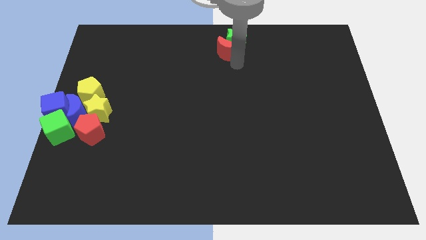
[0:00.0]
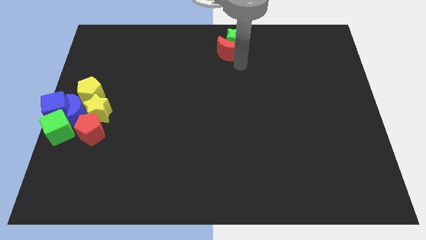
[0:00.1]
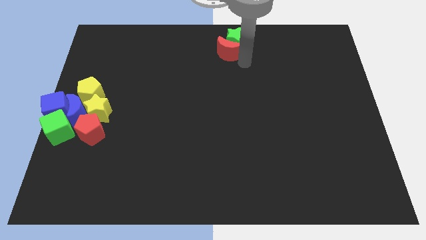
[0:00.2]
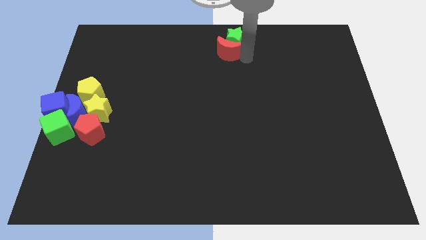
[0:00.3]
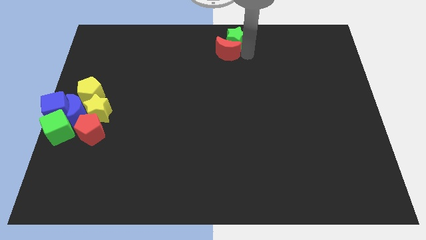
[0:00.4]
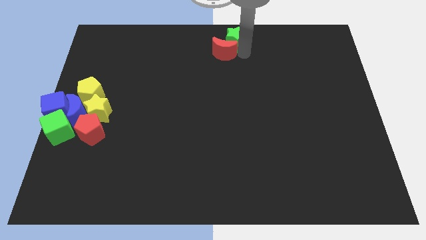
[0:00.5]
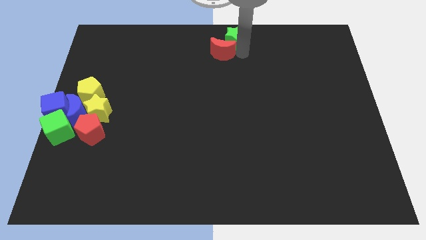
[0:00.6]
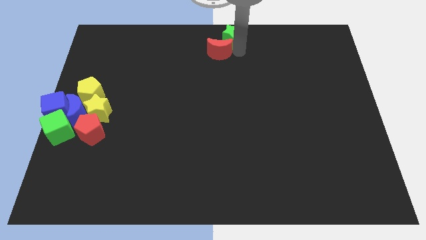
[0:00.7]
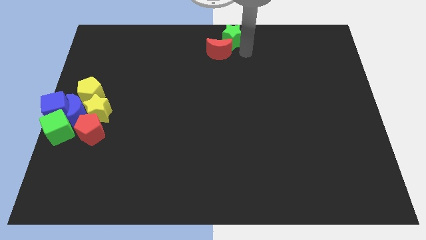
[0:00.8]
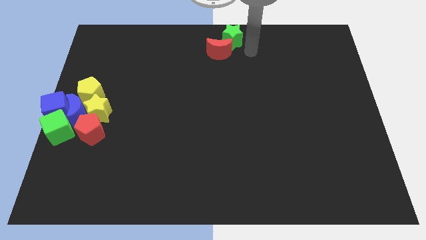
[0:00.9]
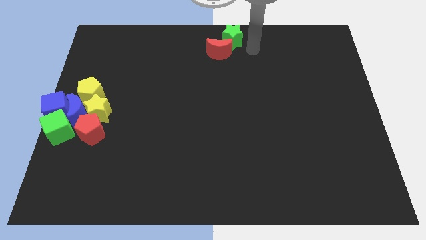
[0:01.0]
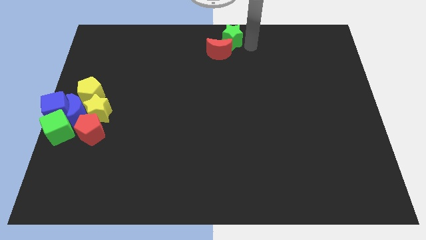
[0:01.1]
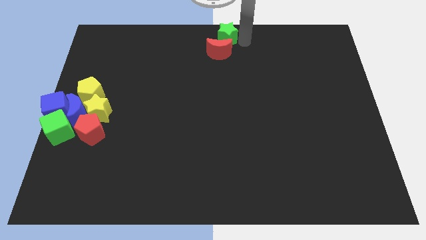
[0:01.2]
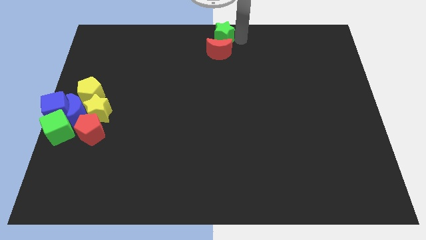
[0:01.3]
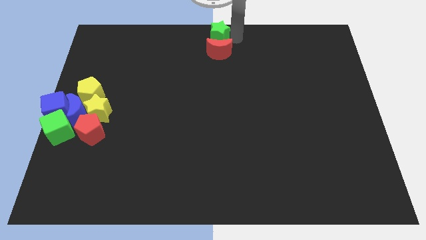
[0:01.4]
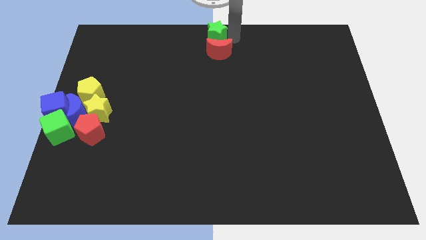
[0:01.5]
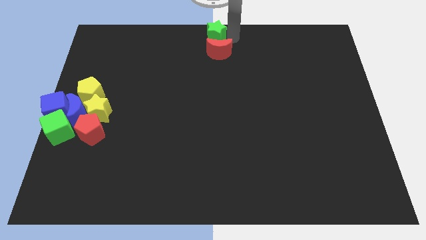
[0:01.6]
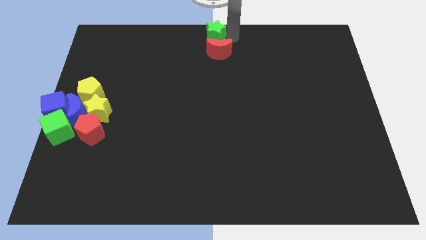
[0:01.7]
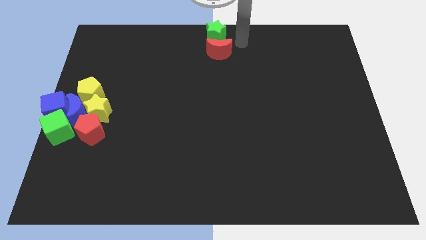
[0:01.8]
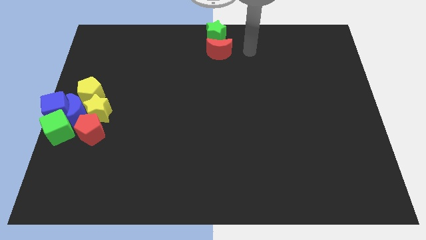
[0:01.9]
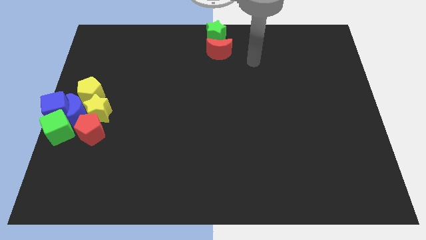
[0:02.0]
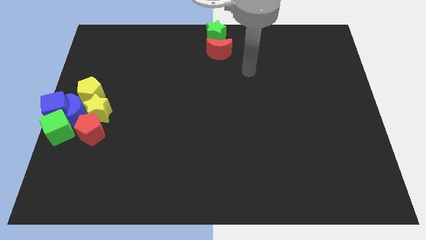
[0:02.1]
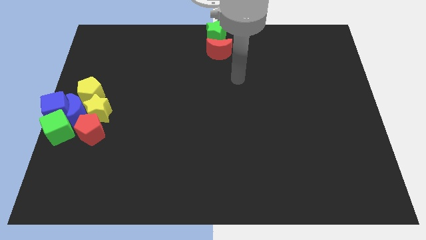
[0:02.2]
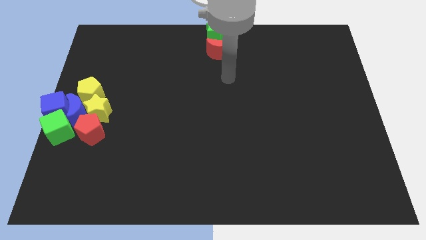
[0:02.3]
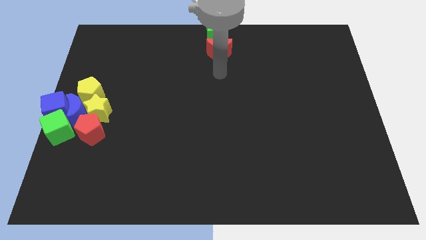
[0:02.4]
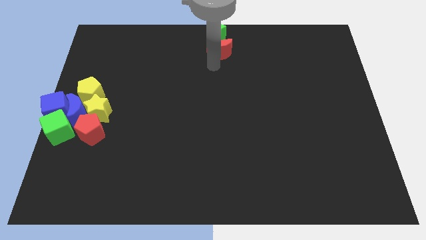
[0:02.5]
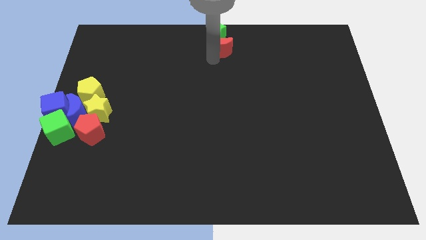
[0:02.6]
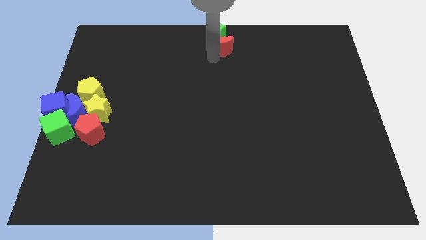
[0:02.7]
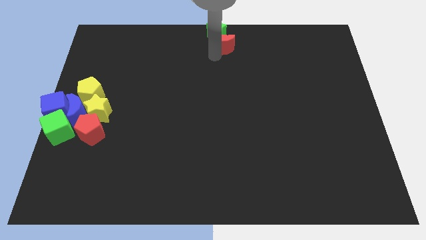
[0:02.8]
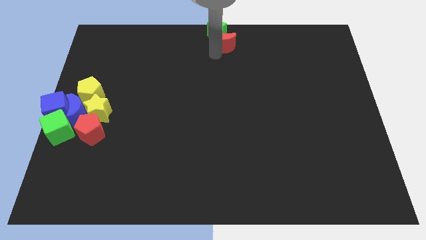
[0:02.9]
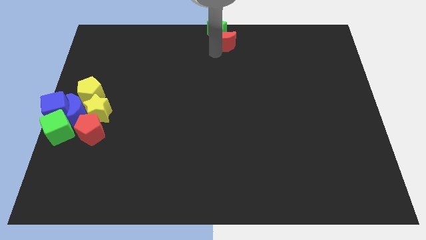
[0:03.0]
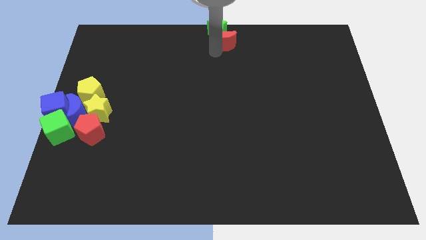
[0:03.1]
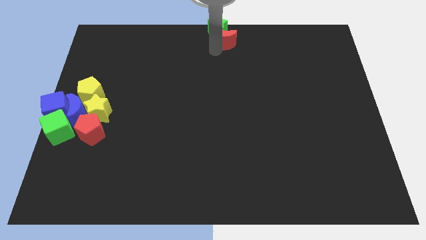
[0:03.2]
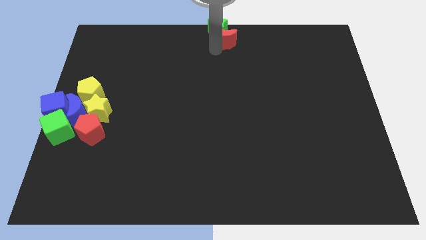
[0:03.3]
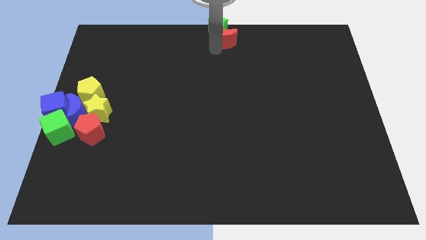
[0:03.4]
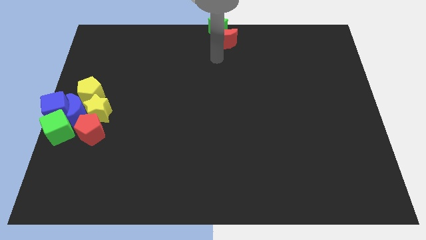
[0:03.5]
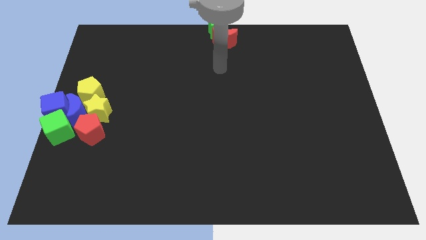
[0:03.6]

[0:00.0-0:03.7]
put the green star and red moon on the top center of the board

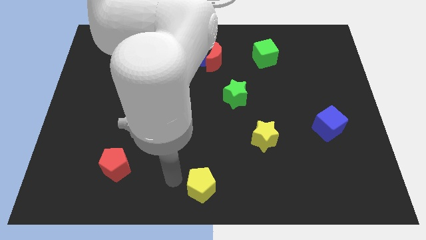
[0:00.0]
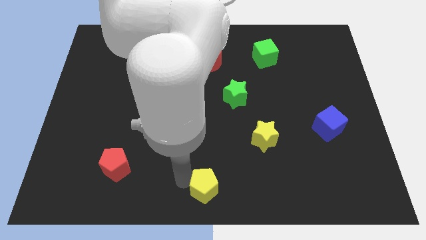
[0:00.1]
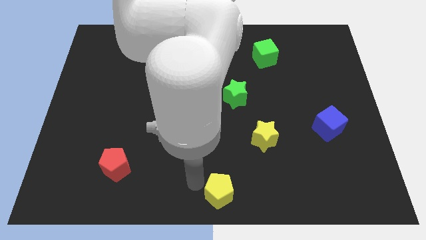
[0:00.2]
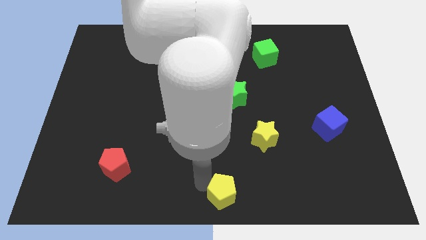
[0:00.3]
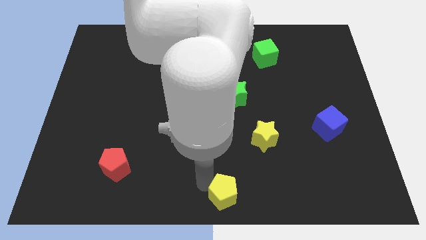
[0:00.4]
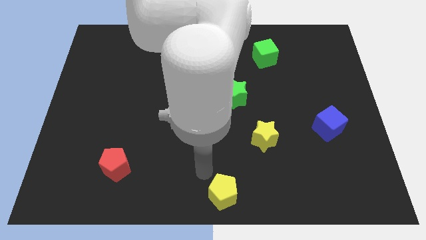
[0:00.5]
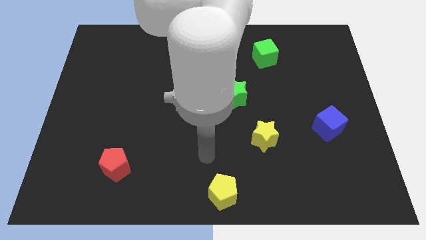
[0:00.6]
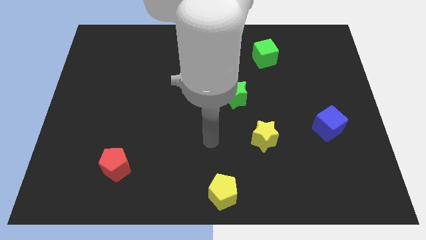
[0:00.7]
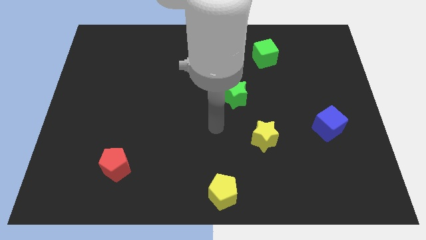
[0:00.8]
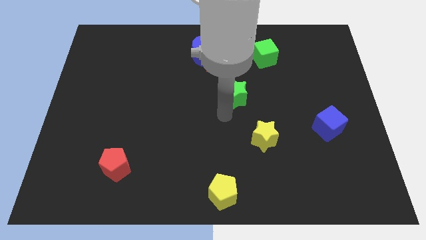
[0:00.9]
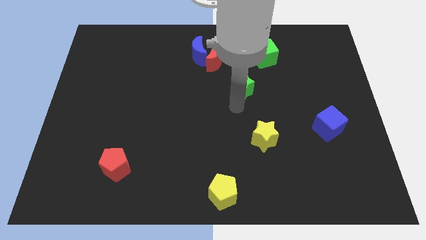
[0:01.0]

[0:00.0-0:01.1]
move yellow pentagon slightly to the right side of the board

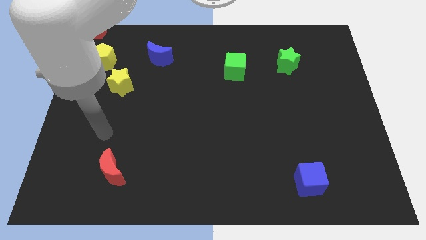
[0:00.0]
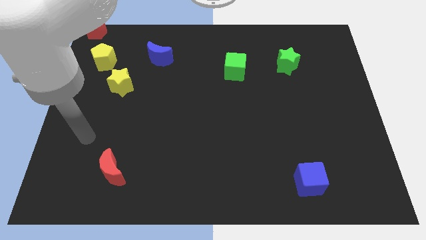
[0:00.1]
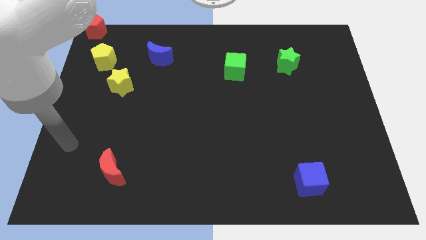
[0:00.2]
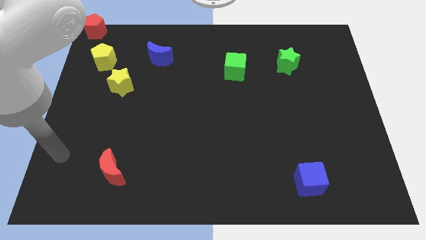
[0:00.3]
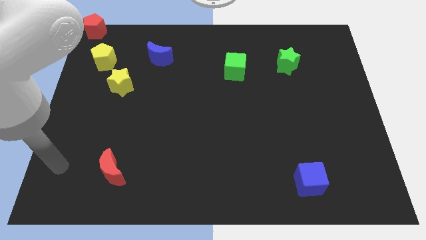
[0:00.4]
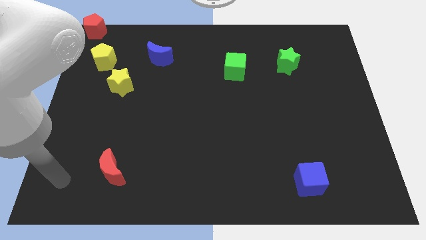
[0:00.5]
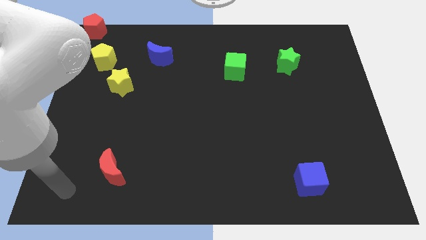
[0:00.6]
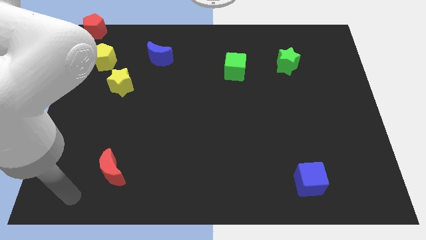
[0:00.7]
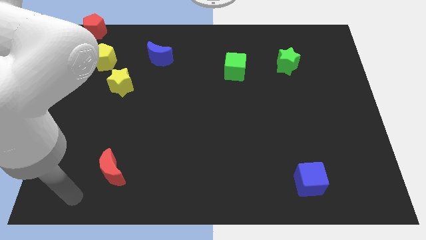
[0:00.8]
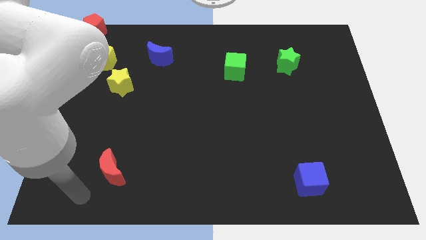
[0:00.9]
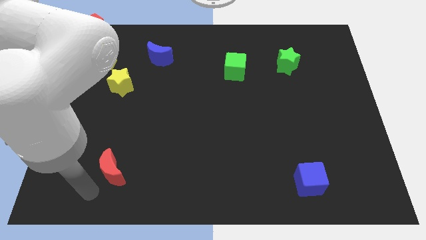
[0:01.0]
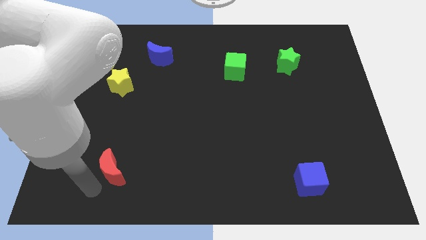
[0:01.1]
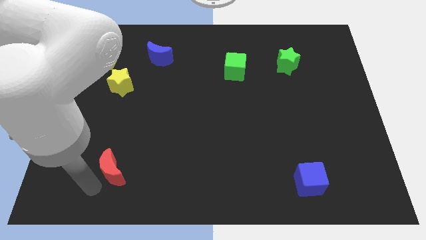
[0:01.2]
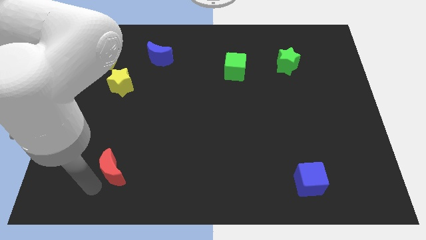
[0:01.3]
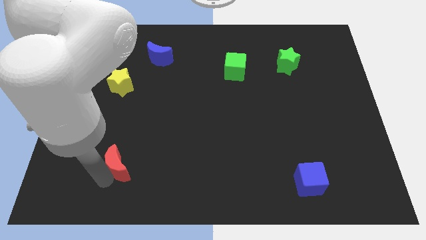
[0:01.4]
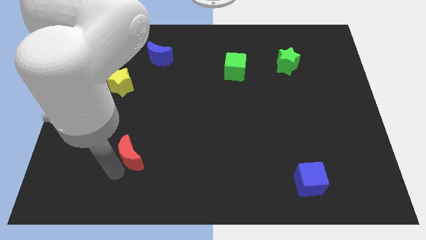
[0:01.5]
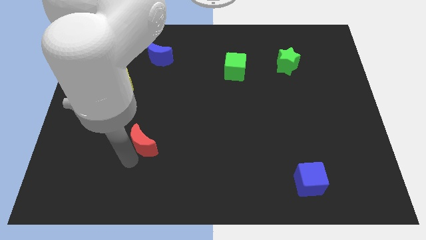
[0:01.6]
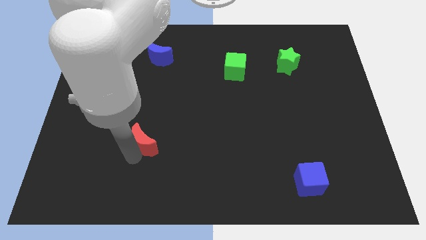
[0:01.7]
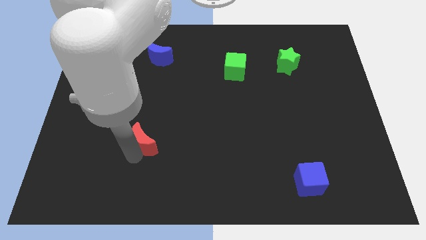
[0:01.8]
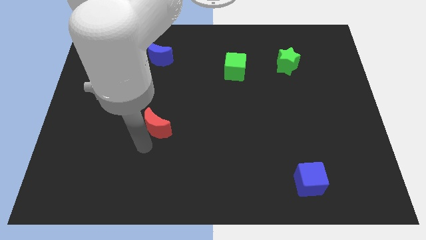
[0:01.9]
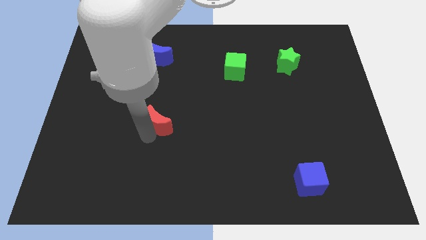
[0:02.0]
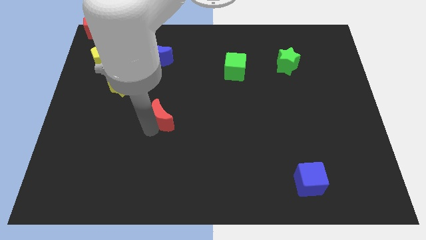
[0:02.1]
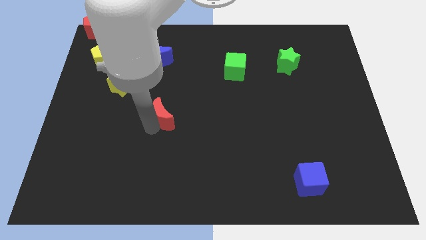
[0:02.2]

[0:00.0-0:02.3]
push the red crescent slightly upwards

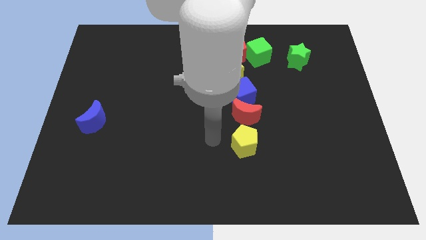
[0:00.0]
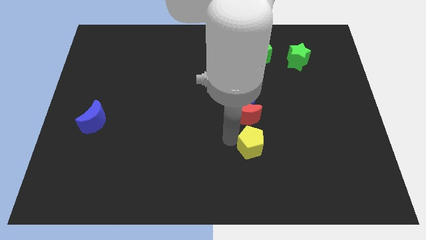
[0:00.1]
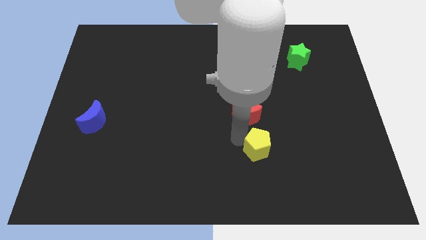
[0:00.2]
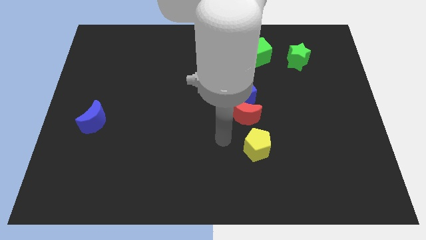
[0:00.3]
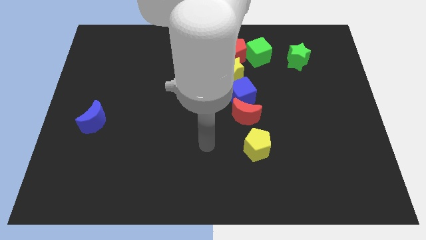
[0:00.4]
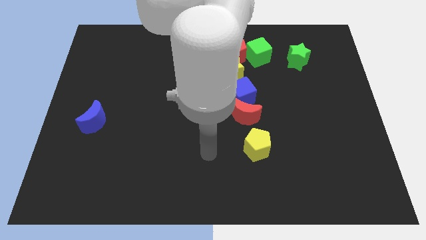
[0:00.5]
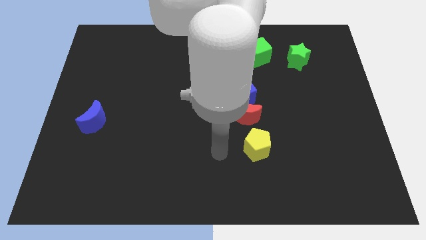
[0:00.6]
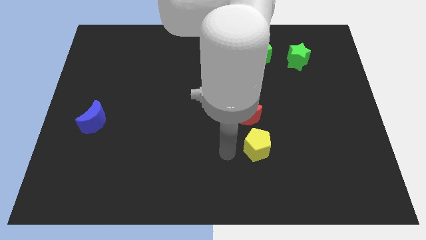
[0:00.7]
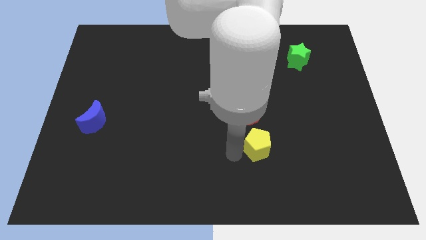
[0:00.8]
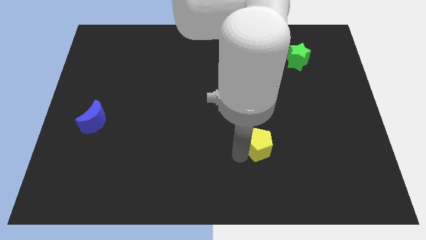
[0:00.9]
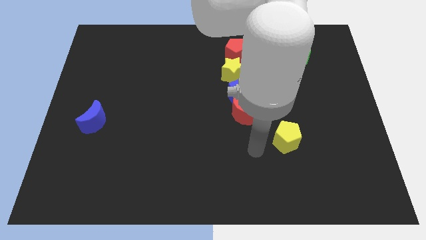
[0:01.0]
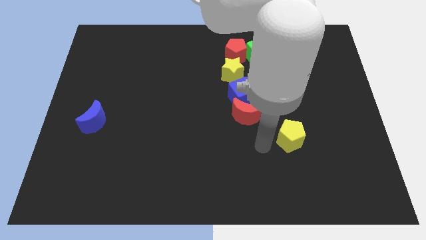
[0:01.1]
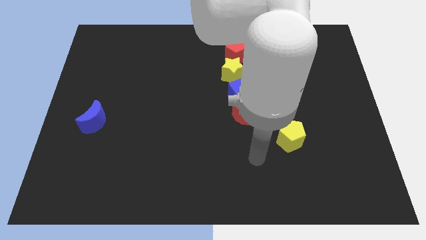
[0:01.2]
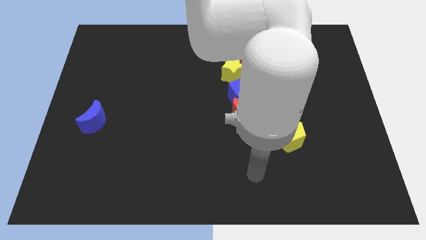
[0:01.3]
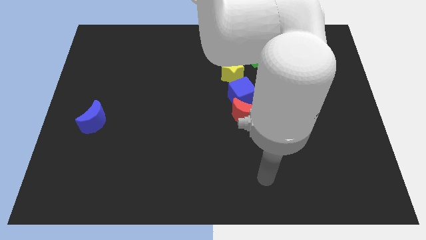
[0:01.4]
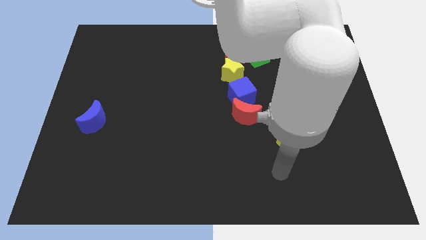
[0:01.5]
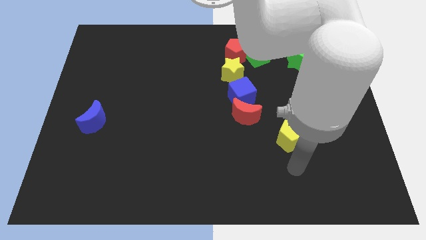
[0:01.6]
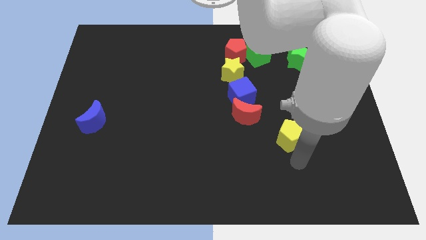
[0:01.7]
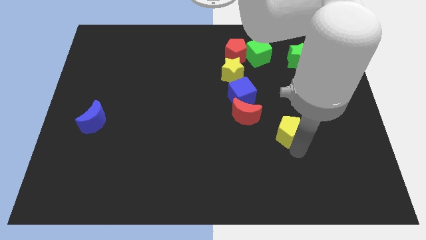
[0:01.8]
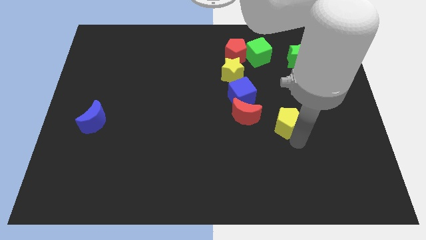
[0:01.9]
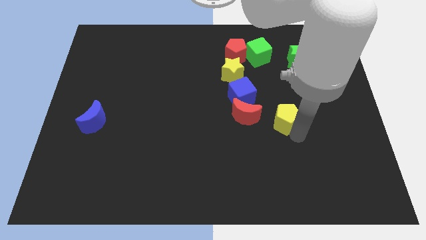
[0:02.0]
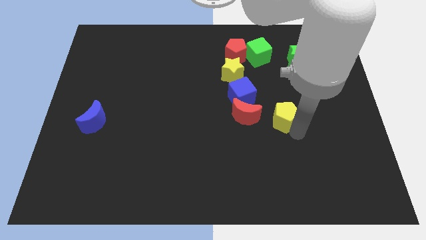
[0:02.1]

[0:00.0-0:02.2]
push the yellow pentagon to the right of the red crescent
